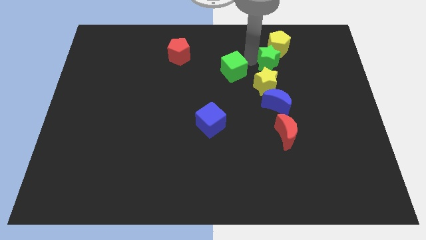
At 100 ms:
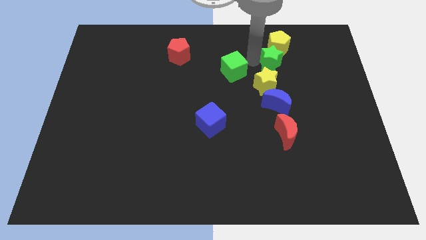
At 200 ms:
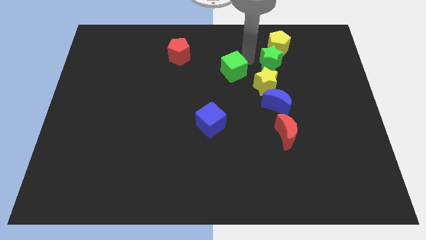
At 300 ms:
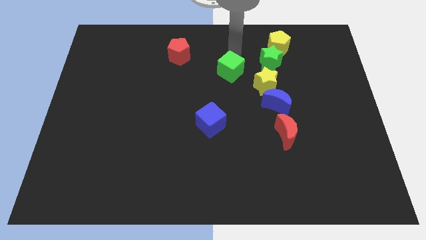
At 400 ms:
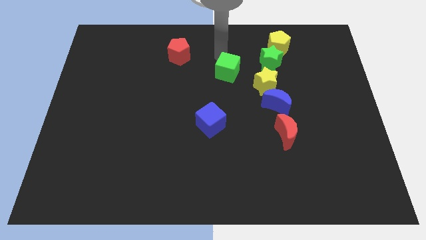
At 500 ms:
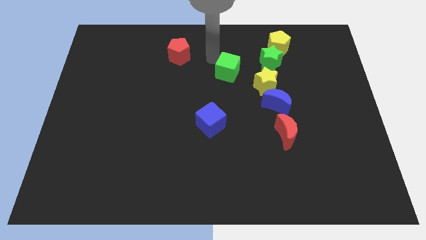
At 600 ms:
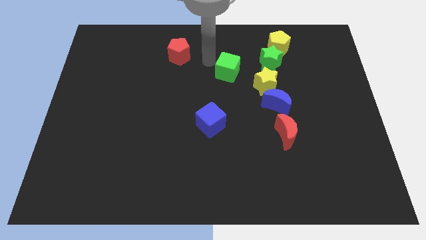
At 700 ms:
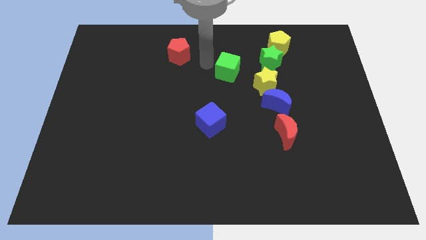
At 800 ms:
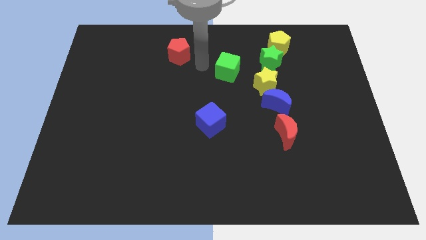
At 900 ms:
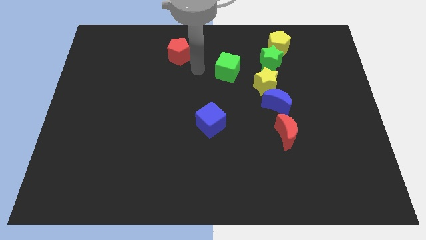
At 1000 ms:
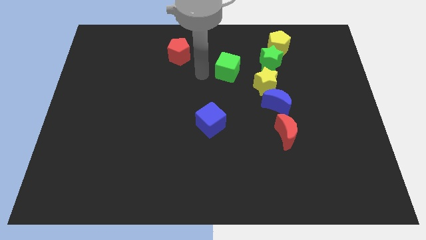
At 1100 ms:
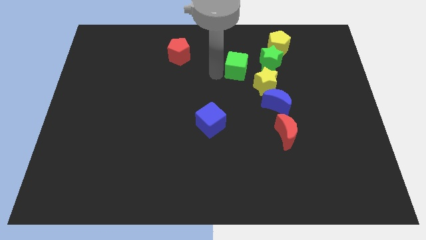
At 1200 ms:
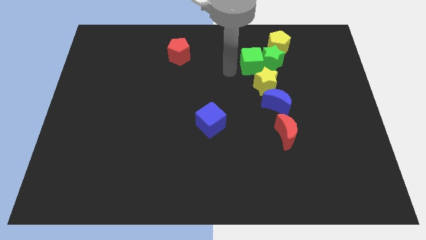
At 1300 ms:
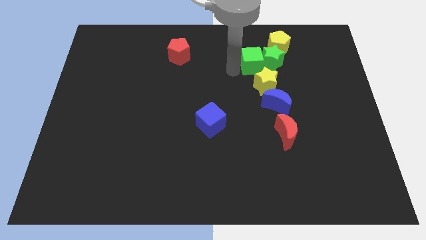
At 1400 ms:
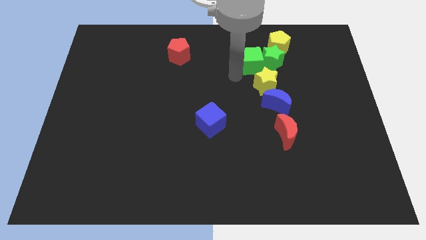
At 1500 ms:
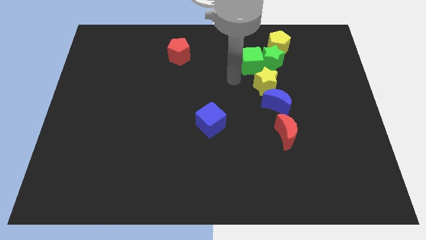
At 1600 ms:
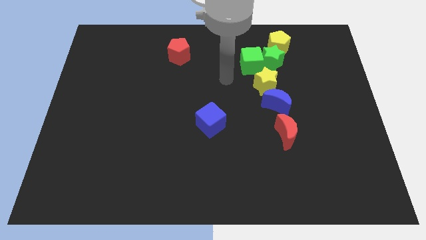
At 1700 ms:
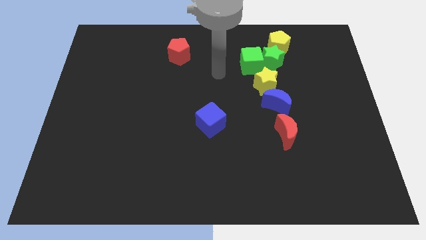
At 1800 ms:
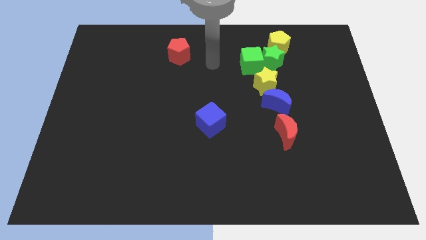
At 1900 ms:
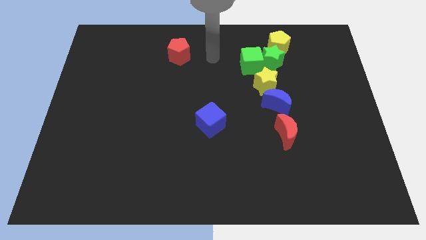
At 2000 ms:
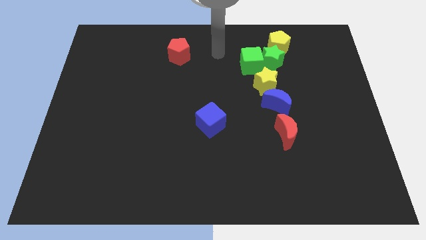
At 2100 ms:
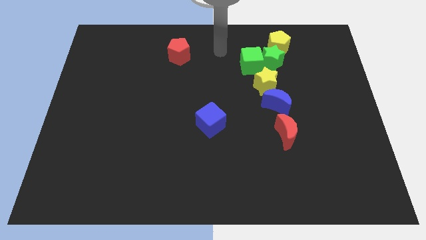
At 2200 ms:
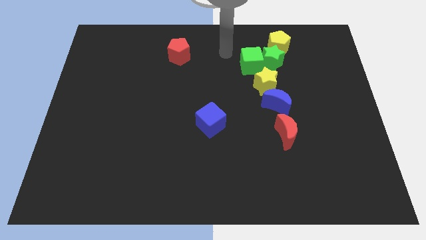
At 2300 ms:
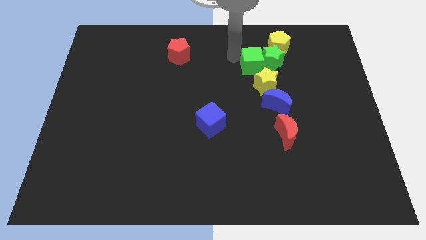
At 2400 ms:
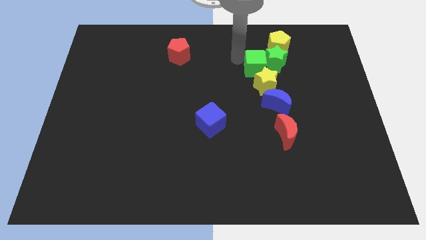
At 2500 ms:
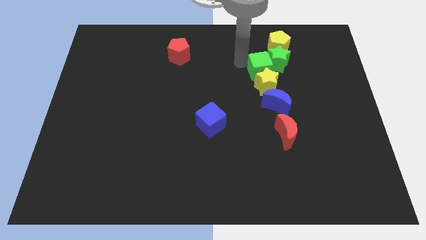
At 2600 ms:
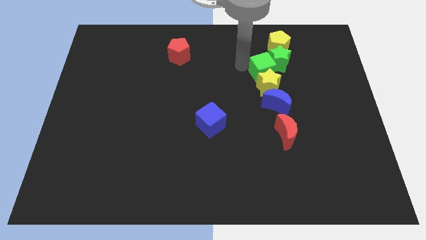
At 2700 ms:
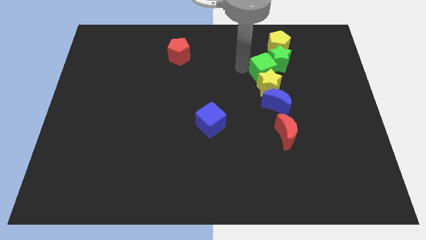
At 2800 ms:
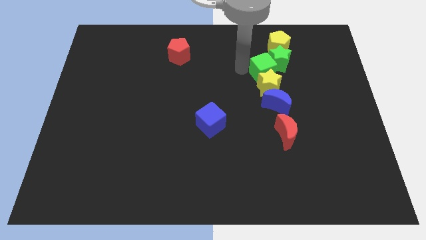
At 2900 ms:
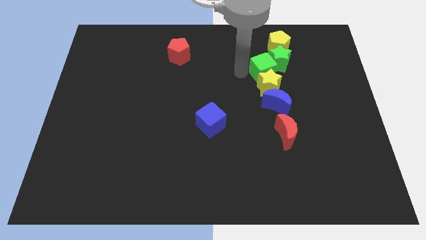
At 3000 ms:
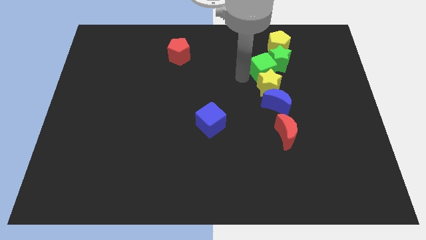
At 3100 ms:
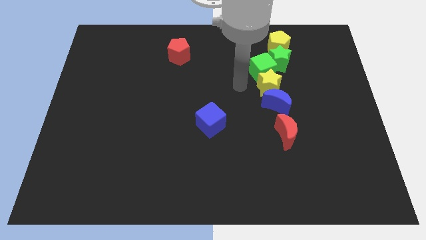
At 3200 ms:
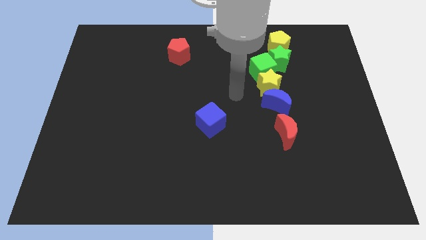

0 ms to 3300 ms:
push the green cube into the green star

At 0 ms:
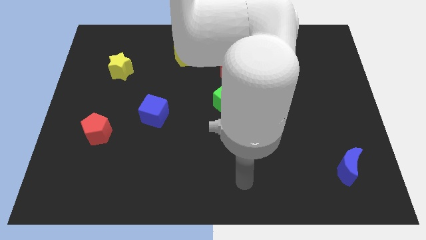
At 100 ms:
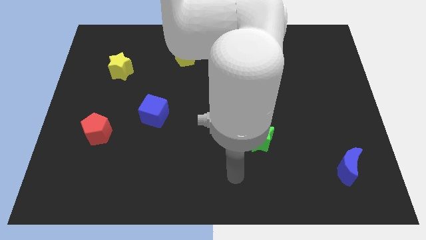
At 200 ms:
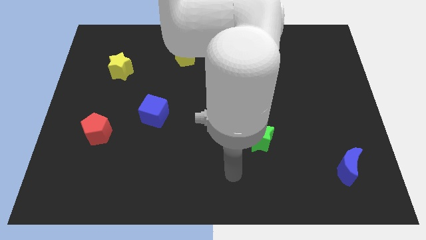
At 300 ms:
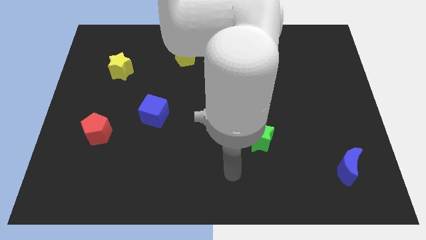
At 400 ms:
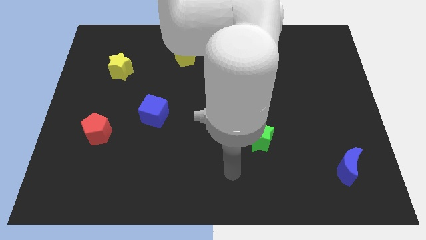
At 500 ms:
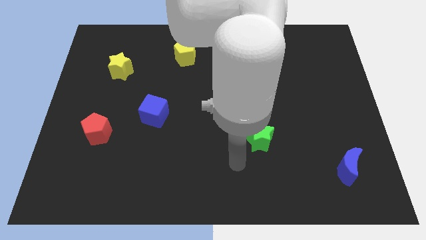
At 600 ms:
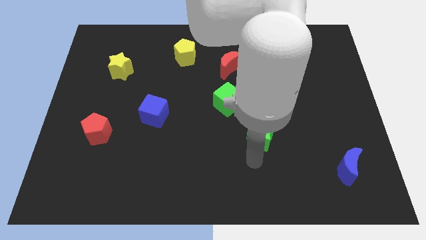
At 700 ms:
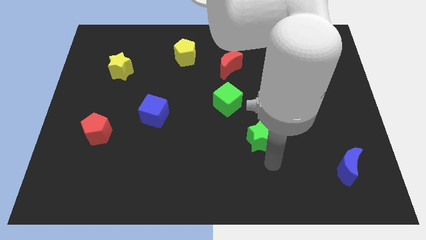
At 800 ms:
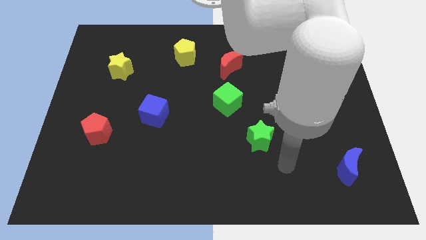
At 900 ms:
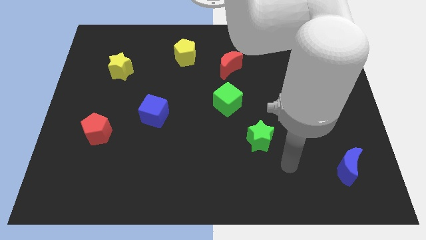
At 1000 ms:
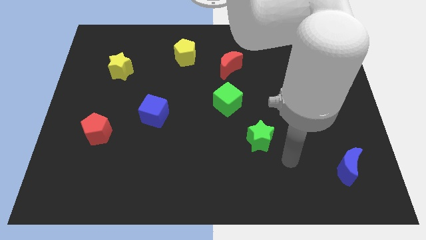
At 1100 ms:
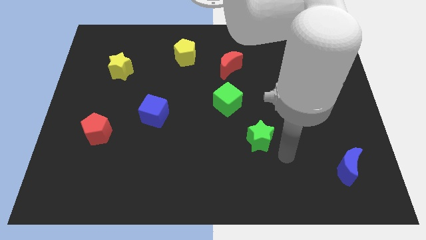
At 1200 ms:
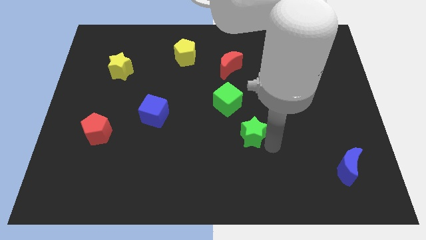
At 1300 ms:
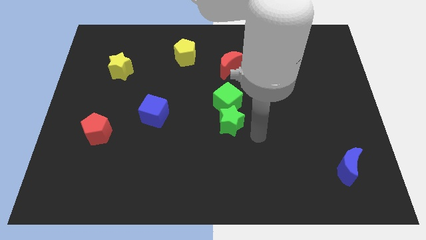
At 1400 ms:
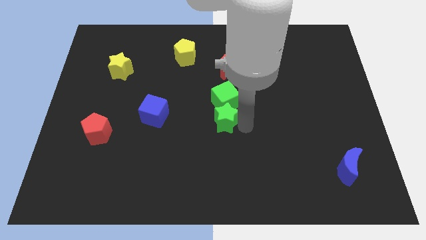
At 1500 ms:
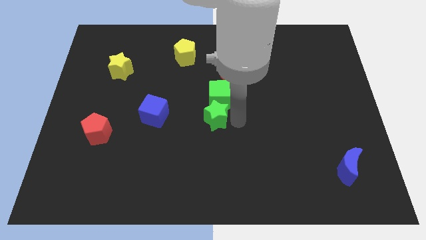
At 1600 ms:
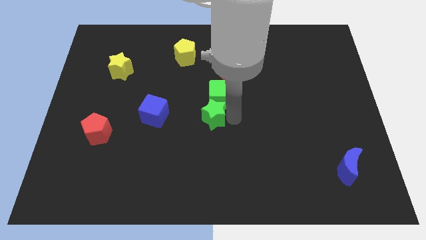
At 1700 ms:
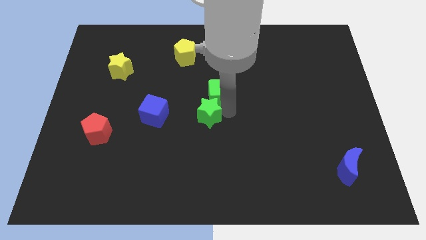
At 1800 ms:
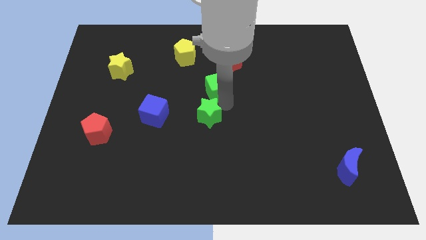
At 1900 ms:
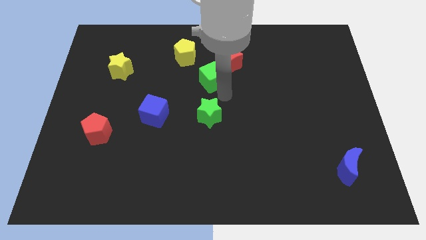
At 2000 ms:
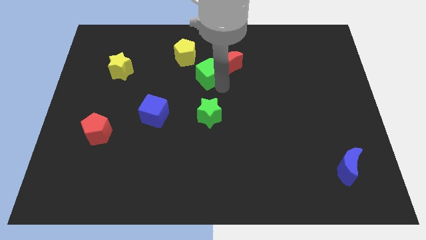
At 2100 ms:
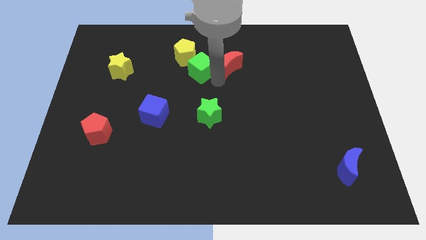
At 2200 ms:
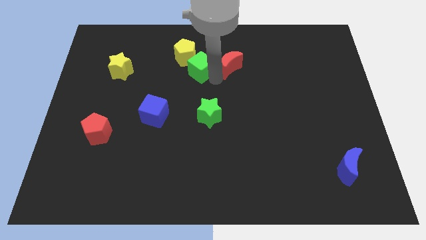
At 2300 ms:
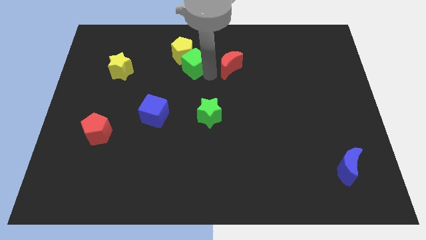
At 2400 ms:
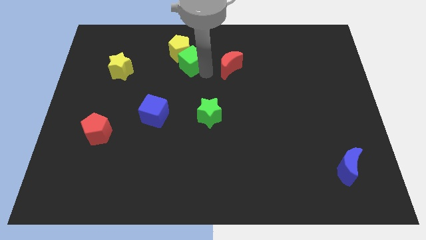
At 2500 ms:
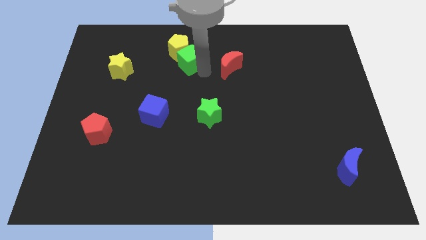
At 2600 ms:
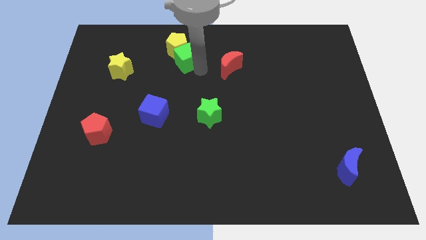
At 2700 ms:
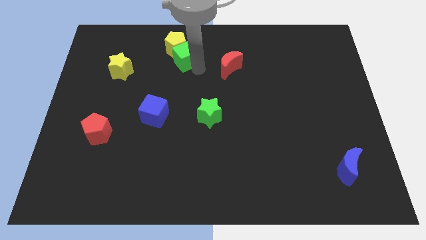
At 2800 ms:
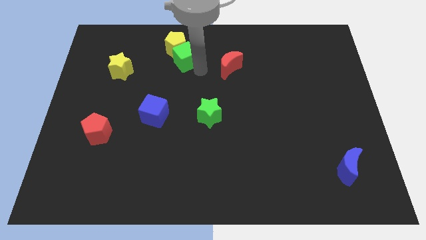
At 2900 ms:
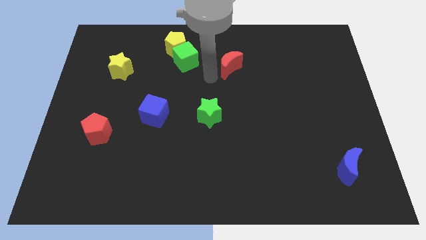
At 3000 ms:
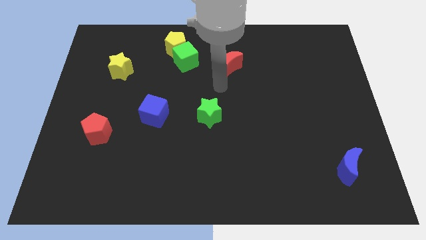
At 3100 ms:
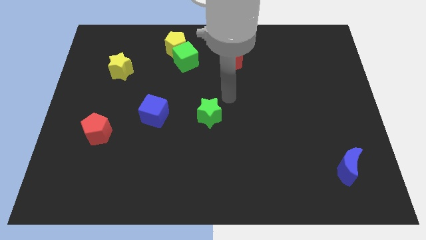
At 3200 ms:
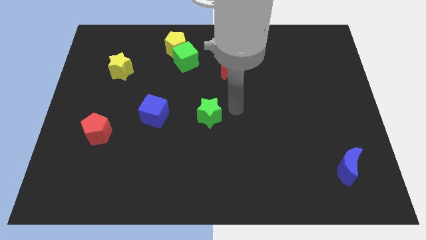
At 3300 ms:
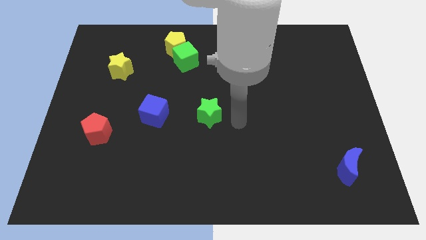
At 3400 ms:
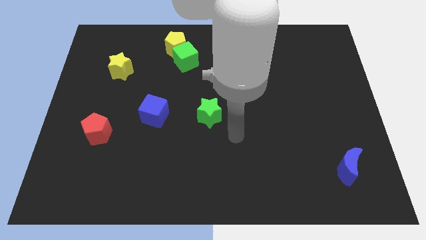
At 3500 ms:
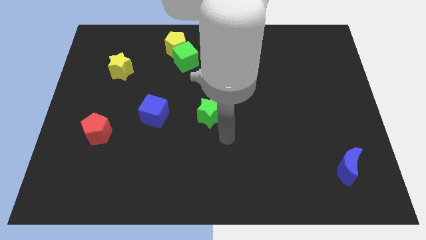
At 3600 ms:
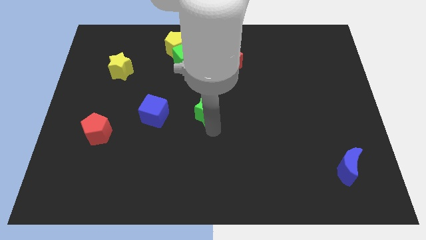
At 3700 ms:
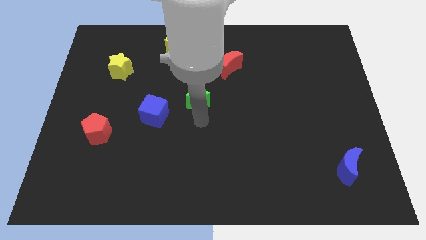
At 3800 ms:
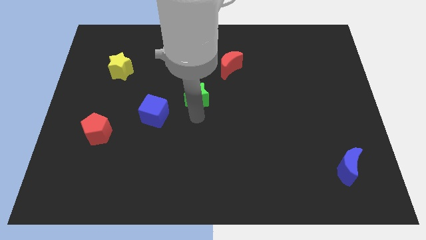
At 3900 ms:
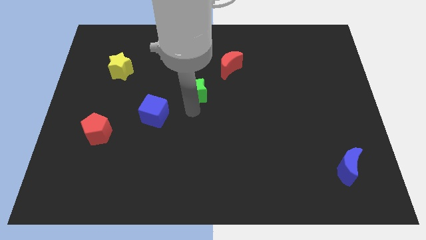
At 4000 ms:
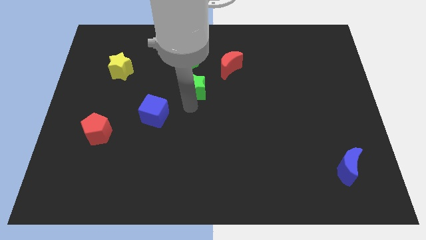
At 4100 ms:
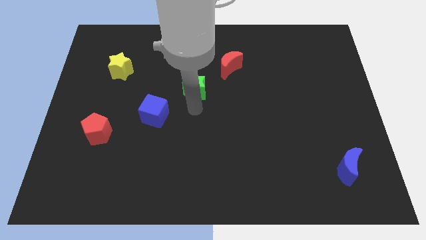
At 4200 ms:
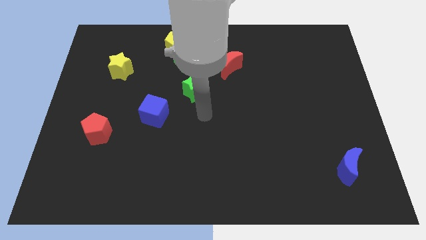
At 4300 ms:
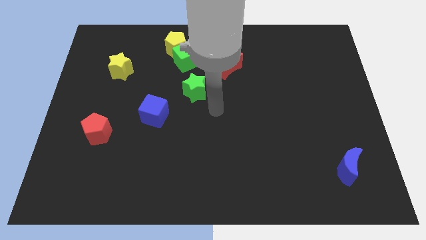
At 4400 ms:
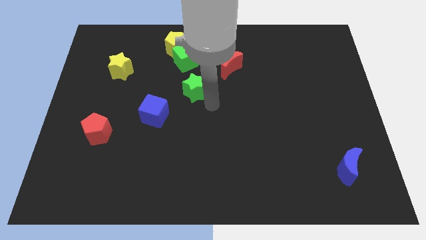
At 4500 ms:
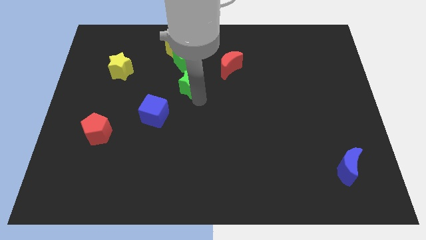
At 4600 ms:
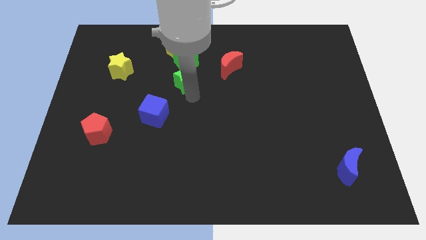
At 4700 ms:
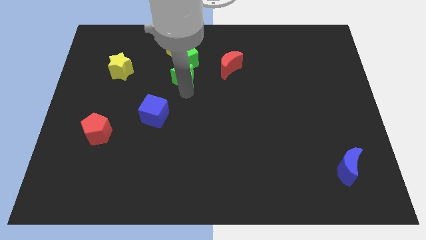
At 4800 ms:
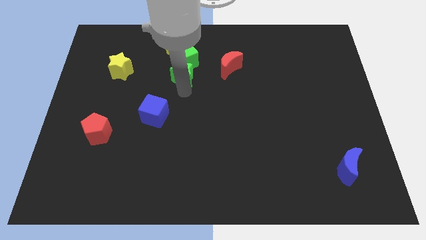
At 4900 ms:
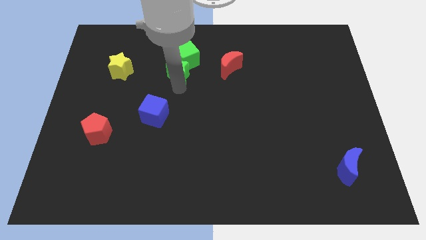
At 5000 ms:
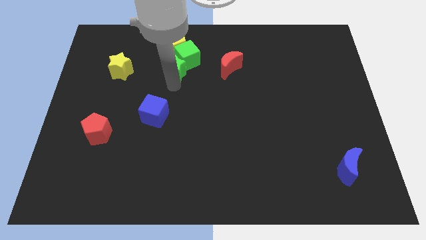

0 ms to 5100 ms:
push the green blocks to the bottom of the yellow pentagon

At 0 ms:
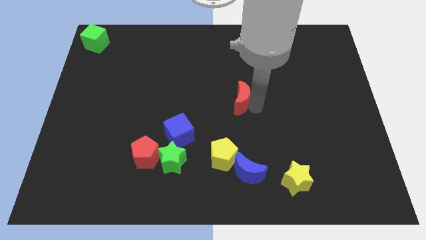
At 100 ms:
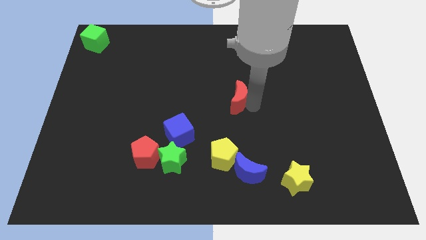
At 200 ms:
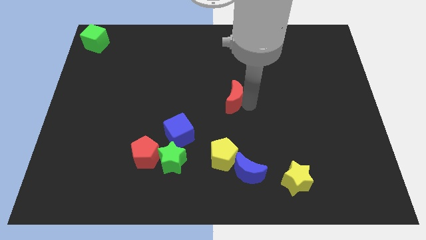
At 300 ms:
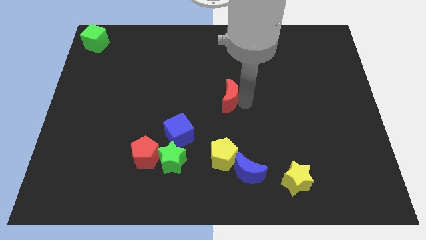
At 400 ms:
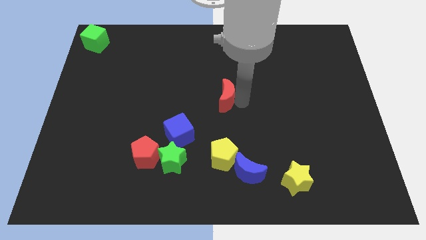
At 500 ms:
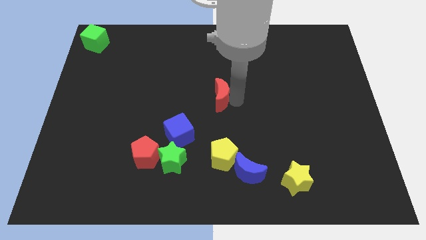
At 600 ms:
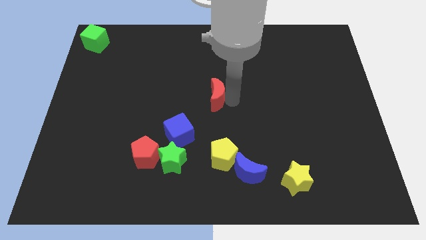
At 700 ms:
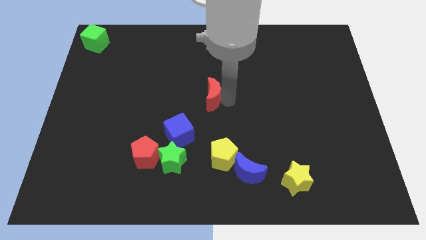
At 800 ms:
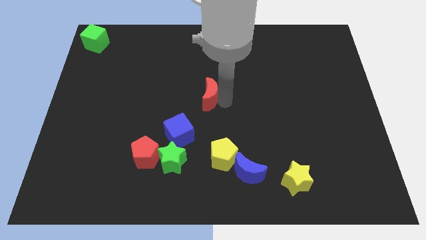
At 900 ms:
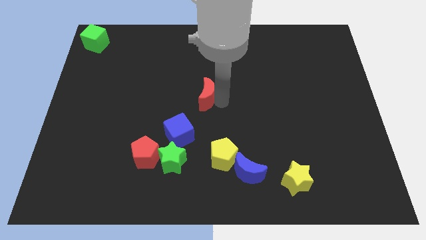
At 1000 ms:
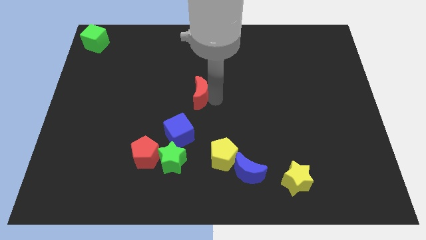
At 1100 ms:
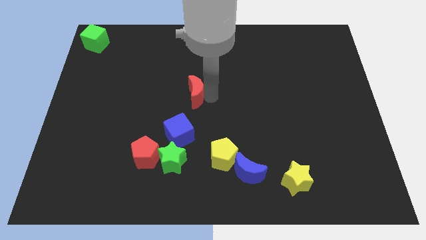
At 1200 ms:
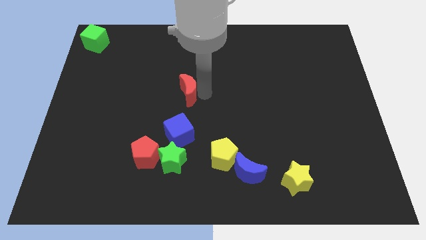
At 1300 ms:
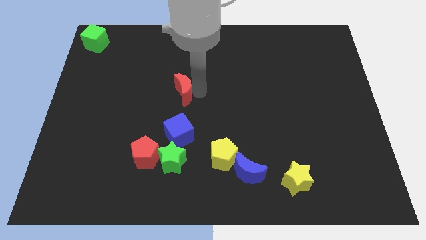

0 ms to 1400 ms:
place the red moon above the blue cube
